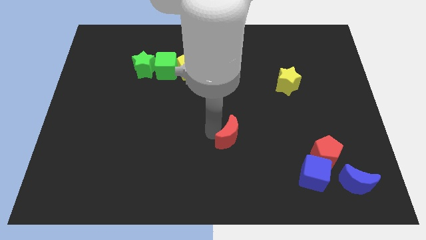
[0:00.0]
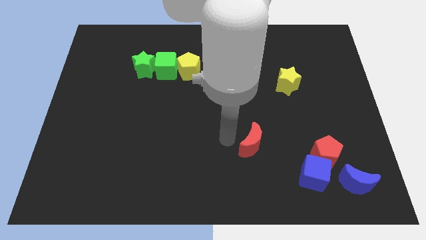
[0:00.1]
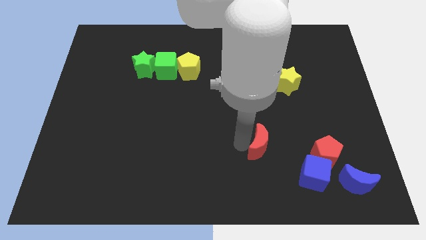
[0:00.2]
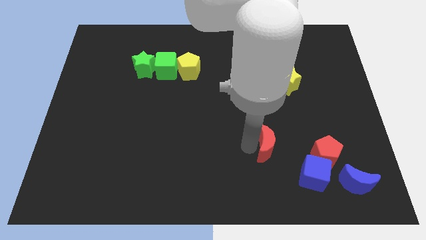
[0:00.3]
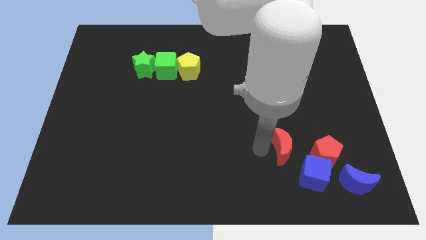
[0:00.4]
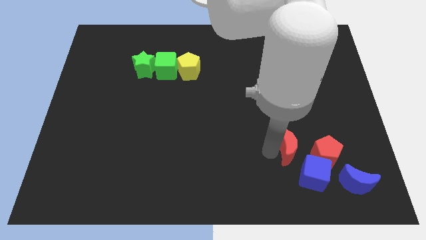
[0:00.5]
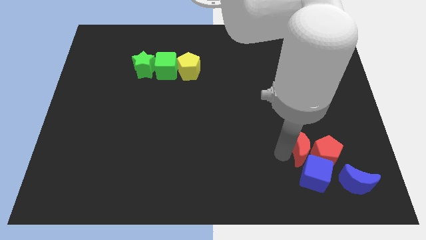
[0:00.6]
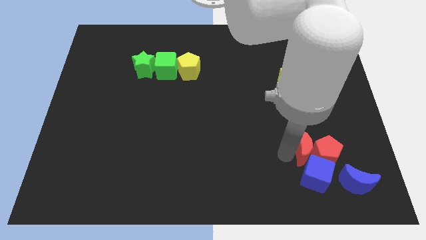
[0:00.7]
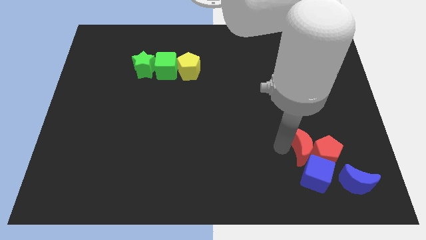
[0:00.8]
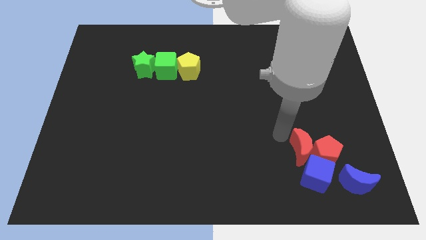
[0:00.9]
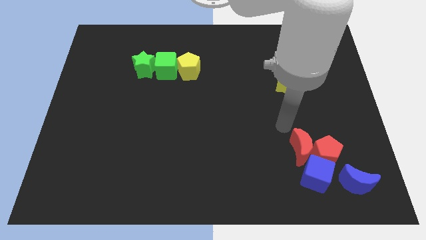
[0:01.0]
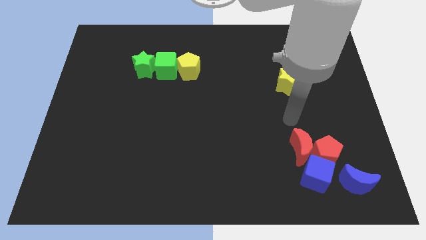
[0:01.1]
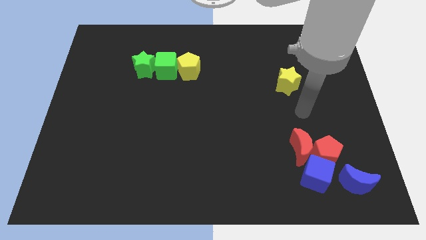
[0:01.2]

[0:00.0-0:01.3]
push the red crescent into the group of blocks

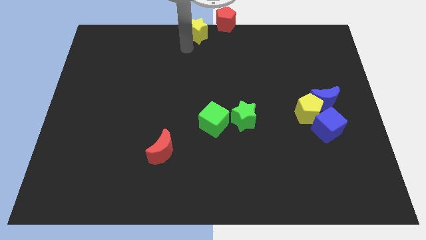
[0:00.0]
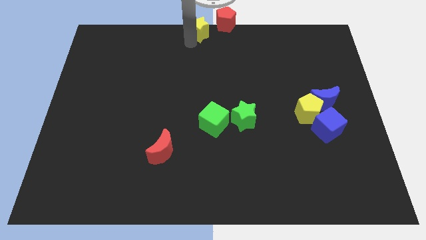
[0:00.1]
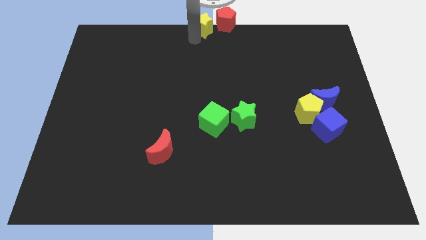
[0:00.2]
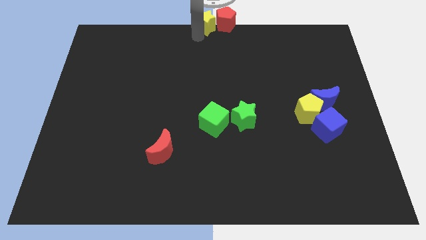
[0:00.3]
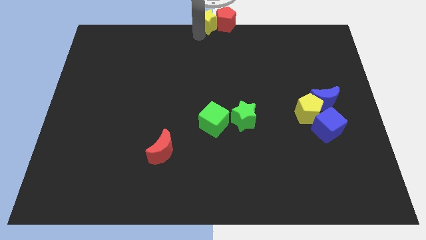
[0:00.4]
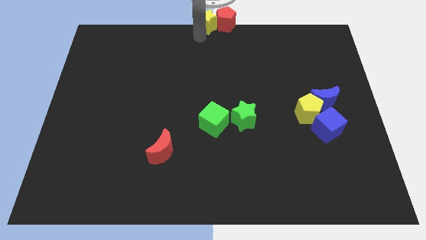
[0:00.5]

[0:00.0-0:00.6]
move the yellow star left to the red pentagon

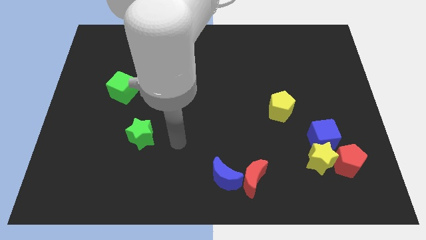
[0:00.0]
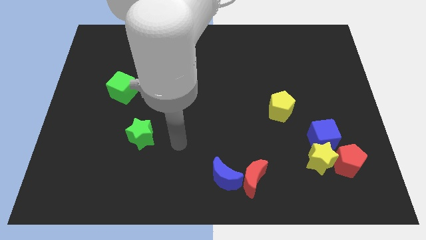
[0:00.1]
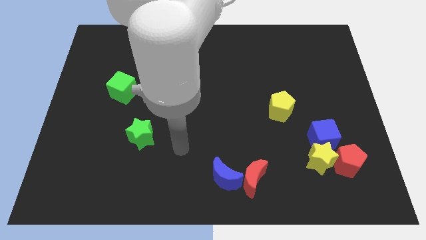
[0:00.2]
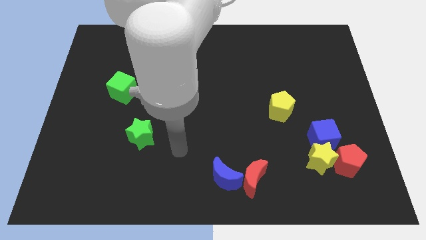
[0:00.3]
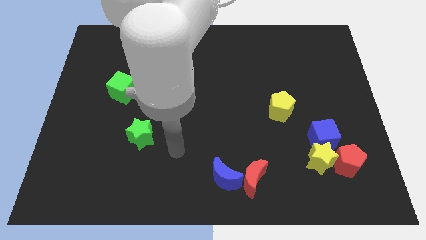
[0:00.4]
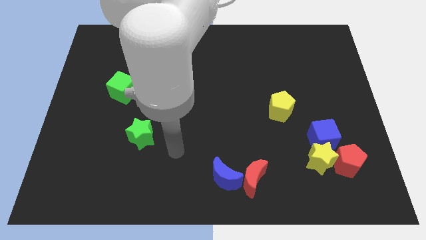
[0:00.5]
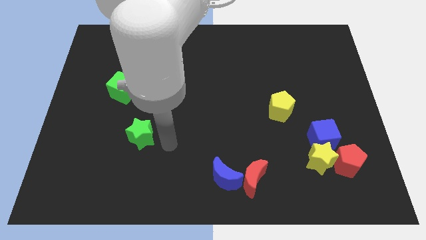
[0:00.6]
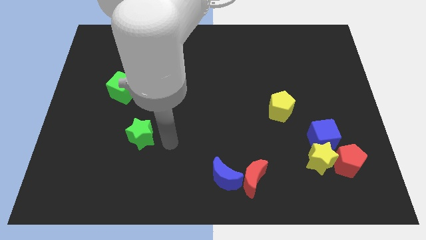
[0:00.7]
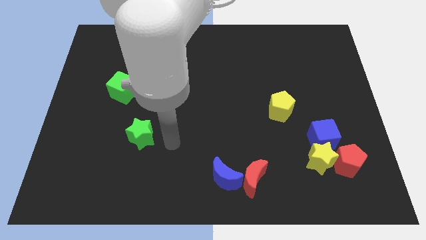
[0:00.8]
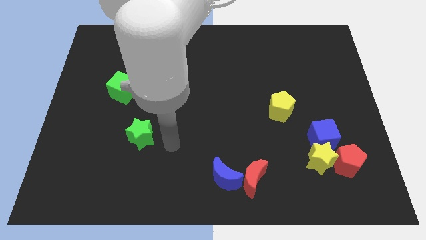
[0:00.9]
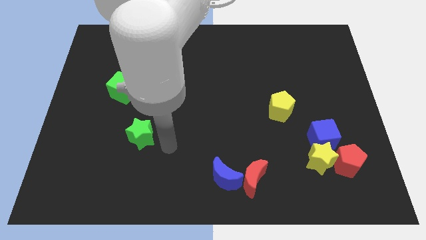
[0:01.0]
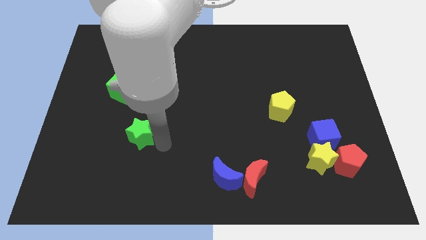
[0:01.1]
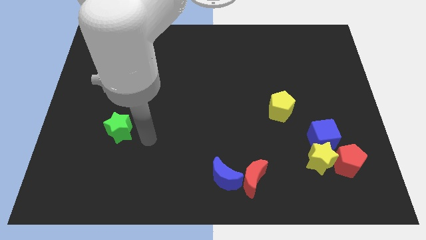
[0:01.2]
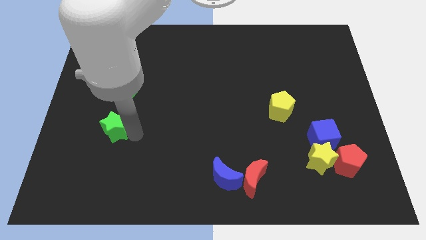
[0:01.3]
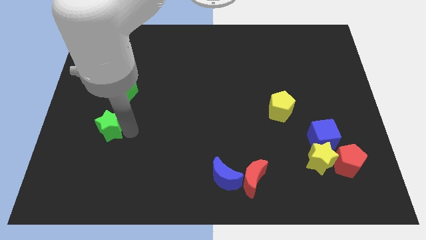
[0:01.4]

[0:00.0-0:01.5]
move the green star to the bottom of the green cube

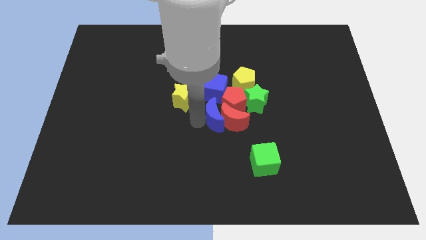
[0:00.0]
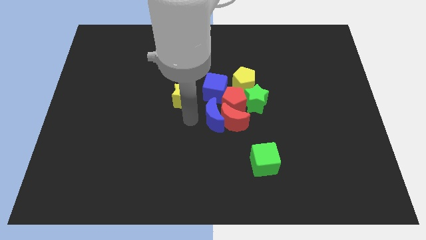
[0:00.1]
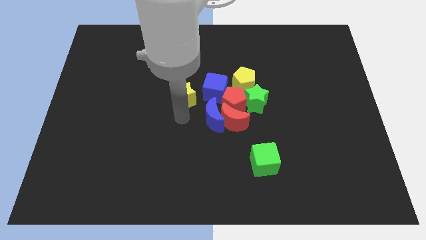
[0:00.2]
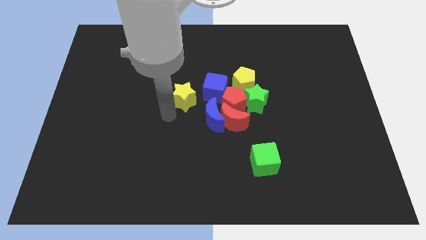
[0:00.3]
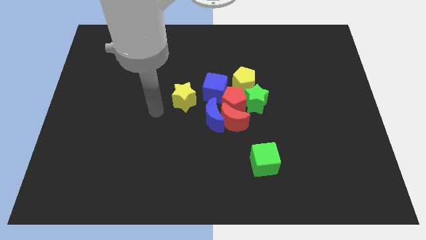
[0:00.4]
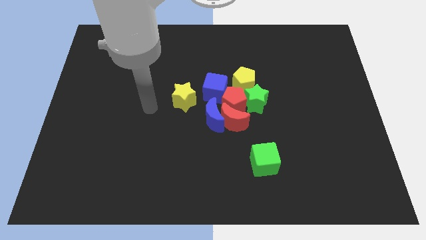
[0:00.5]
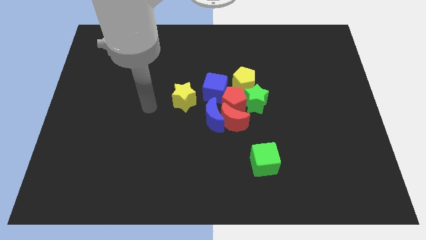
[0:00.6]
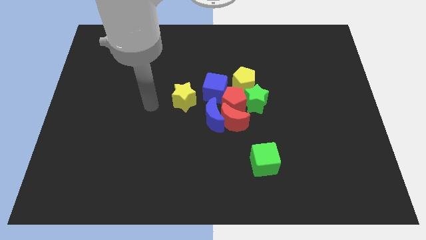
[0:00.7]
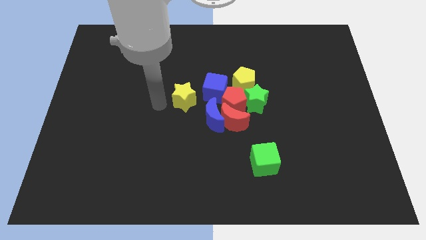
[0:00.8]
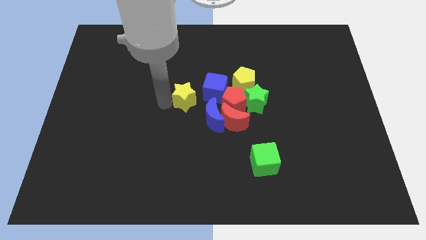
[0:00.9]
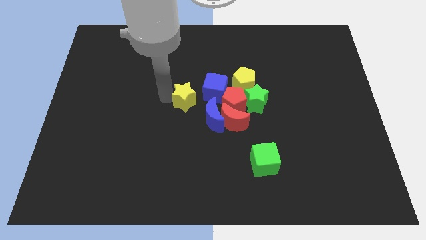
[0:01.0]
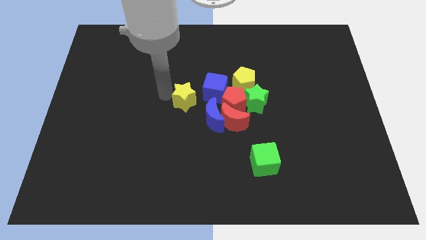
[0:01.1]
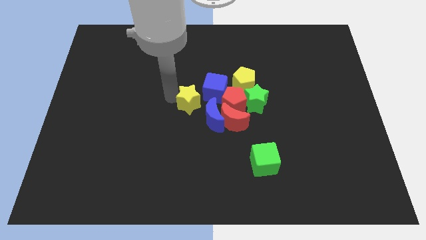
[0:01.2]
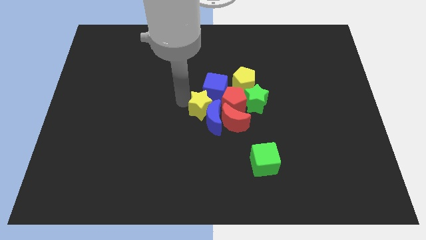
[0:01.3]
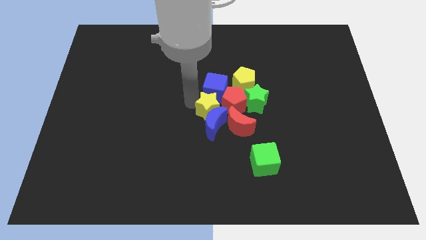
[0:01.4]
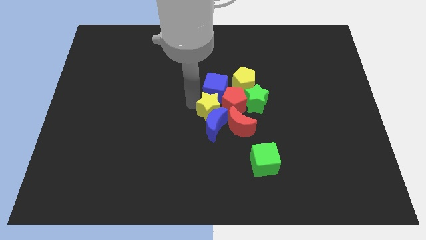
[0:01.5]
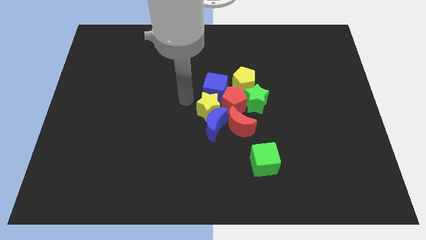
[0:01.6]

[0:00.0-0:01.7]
move the yellow star into the blue crescent and blue cube

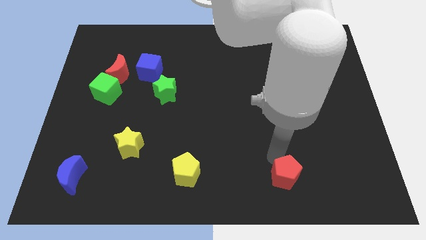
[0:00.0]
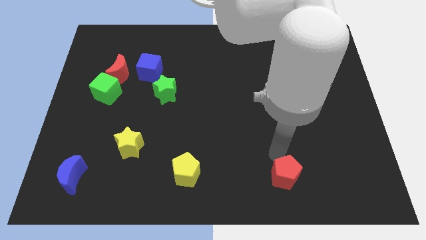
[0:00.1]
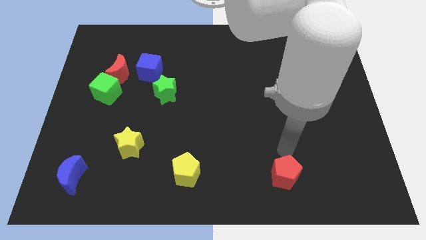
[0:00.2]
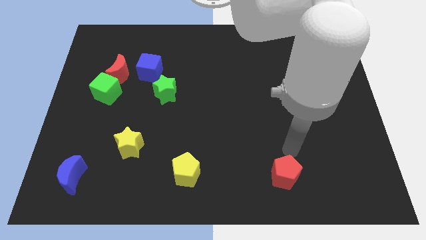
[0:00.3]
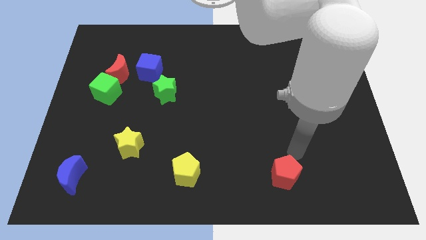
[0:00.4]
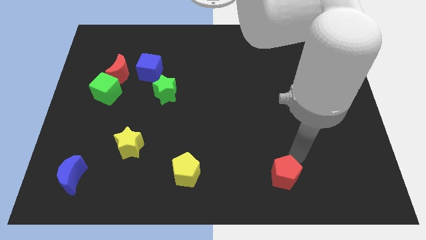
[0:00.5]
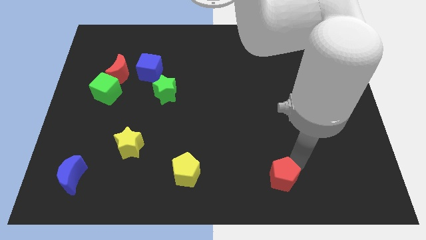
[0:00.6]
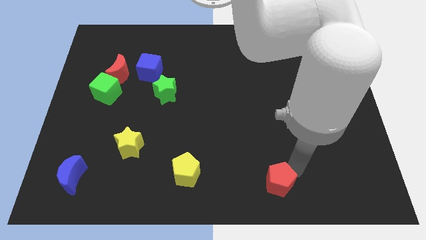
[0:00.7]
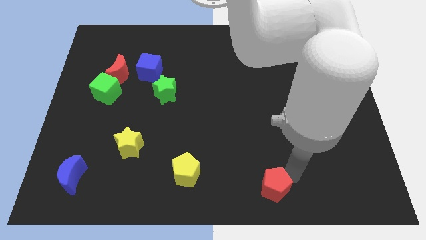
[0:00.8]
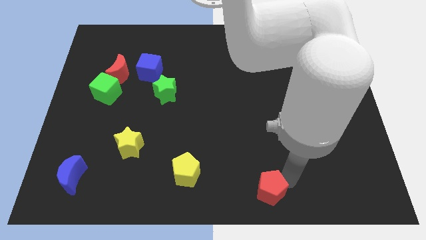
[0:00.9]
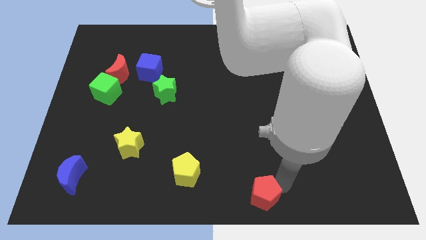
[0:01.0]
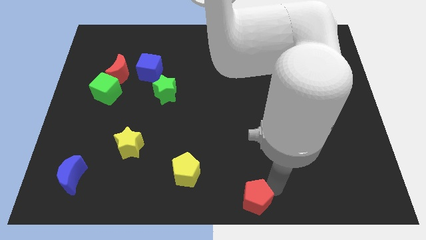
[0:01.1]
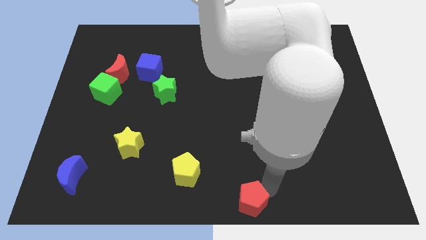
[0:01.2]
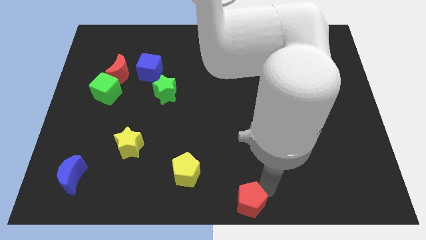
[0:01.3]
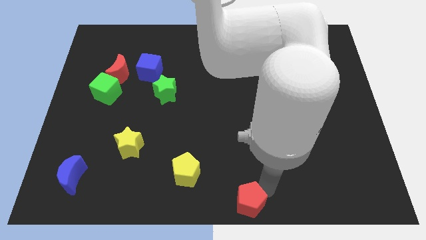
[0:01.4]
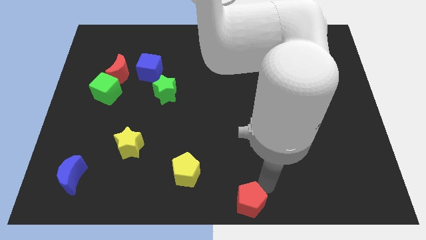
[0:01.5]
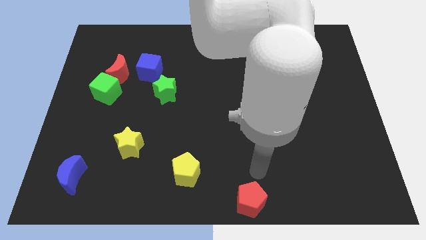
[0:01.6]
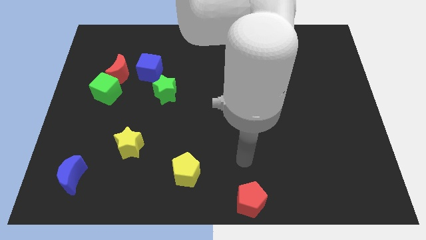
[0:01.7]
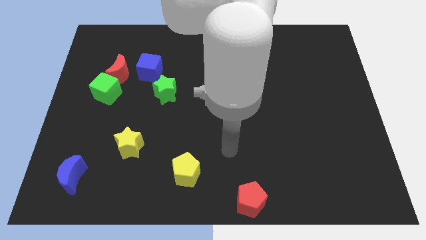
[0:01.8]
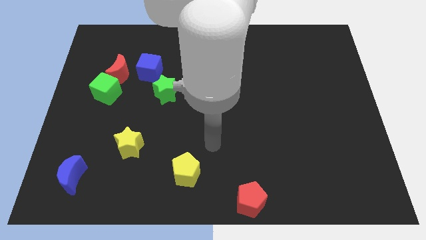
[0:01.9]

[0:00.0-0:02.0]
drag the red pentagon towards the bottom side of the board

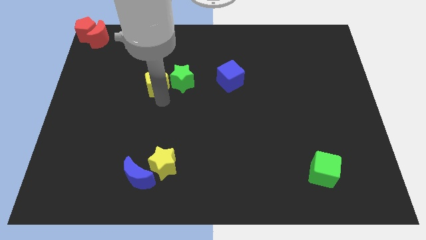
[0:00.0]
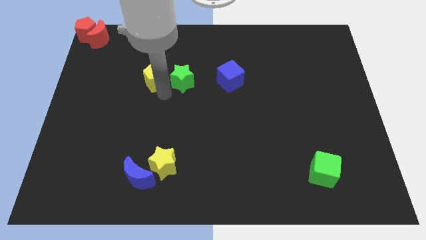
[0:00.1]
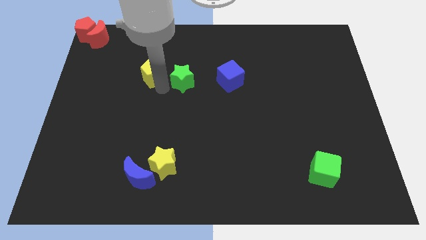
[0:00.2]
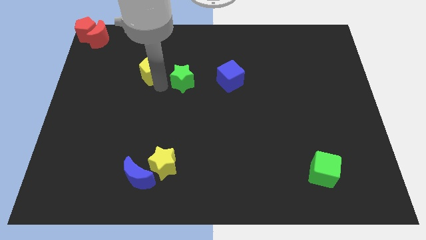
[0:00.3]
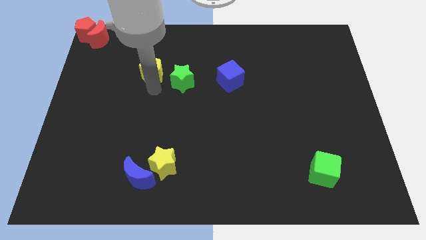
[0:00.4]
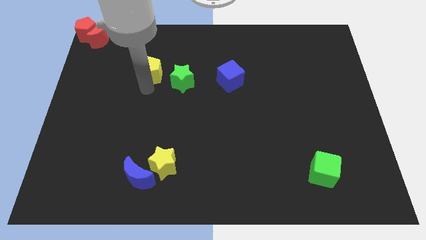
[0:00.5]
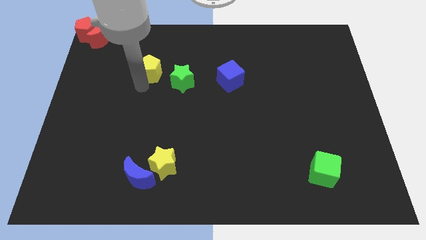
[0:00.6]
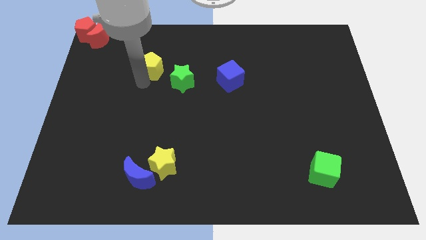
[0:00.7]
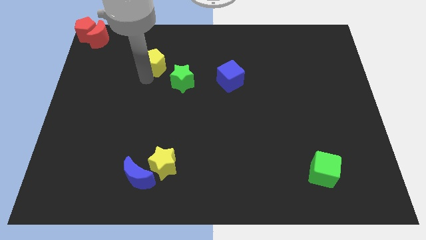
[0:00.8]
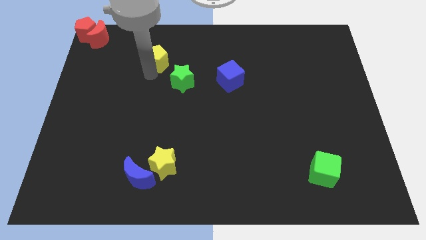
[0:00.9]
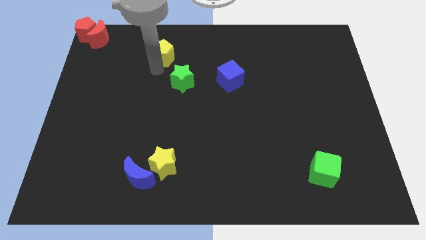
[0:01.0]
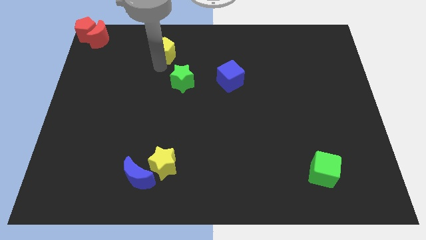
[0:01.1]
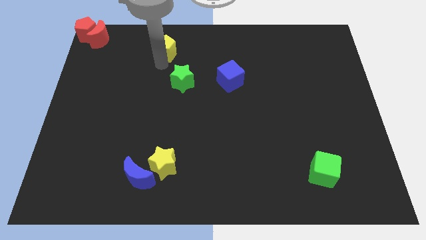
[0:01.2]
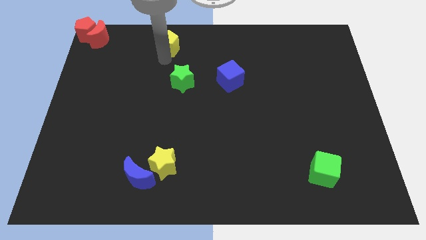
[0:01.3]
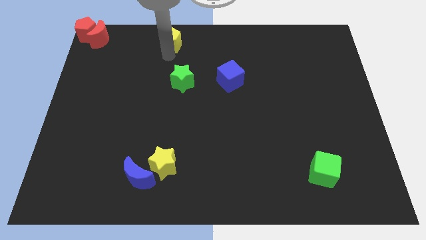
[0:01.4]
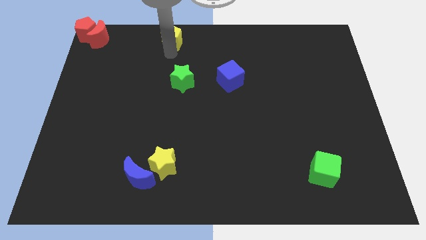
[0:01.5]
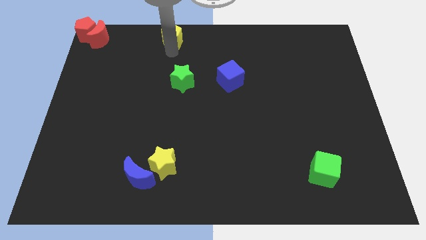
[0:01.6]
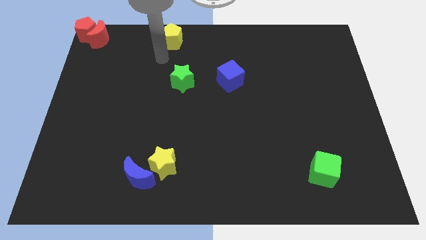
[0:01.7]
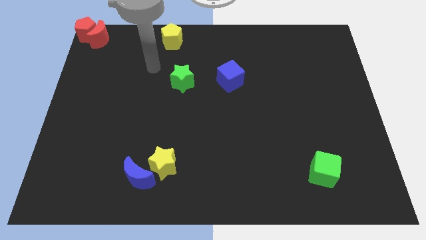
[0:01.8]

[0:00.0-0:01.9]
push the yellow pentagon diagonally top left to the blue cube

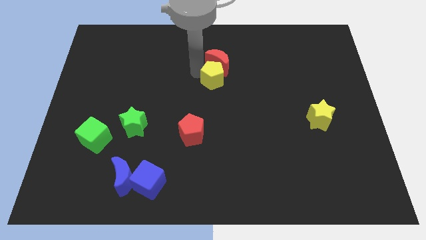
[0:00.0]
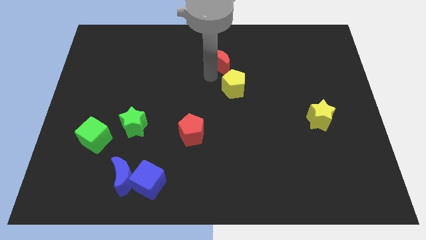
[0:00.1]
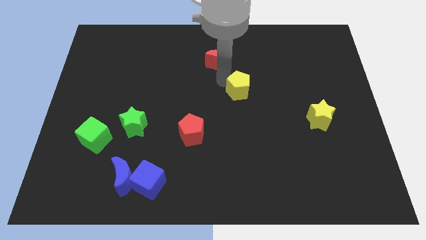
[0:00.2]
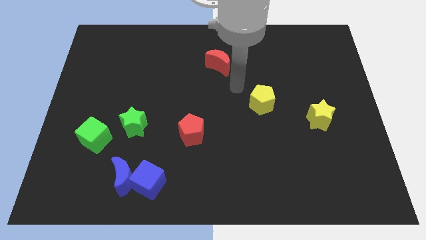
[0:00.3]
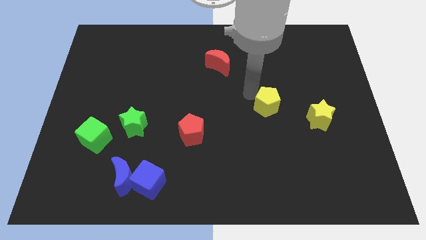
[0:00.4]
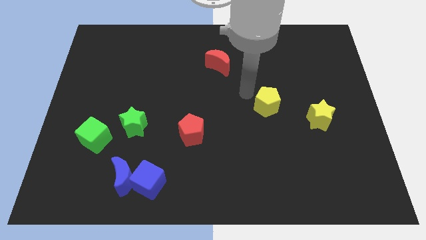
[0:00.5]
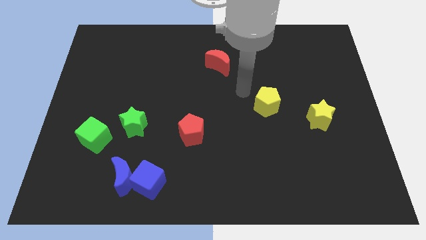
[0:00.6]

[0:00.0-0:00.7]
push the yellow pentagon to the right center of the board
